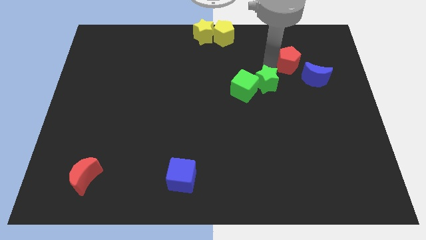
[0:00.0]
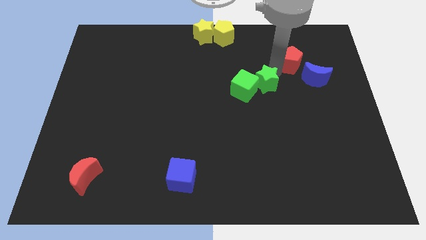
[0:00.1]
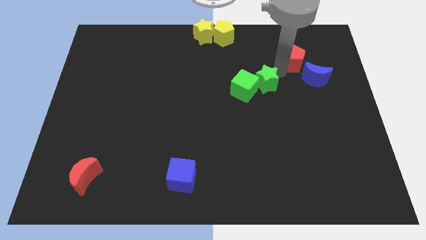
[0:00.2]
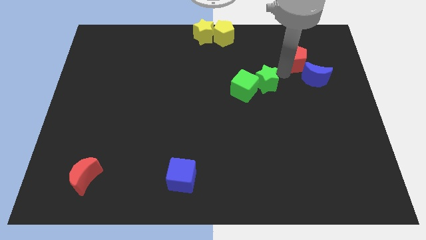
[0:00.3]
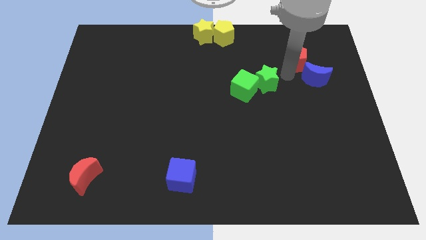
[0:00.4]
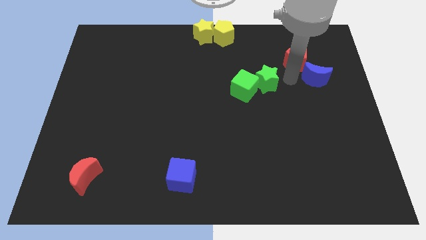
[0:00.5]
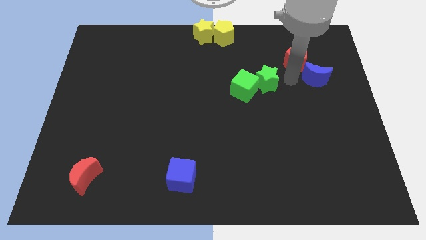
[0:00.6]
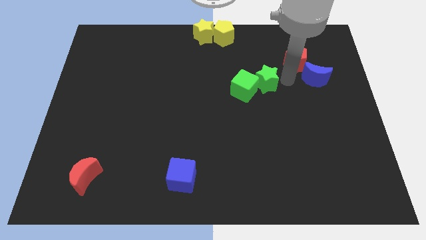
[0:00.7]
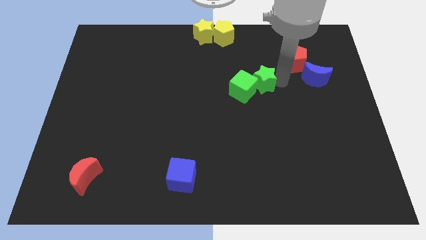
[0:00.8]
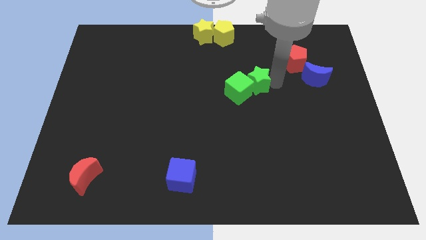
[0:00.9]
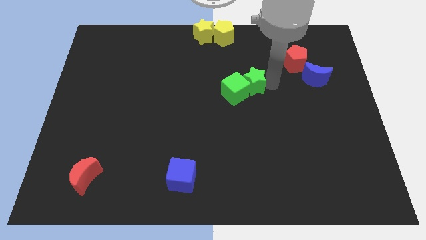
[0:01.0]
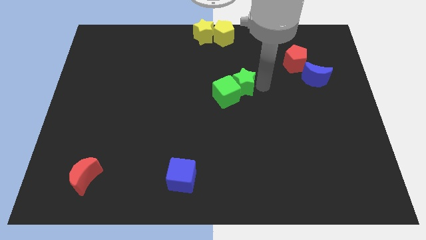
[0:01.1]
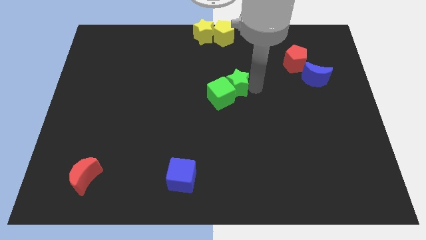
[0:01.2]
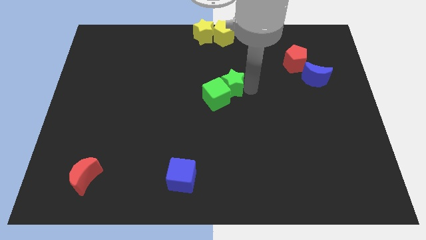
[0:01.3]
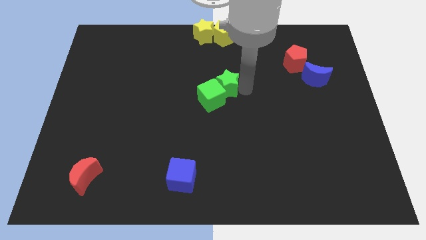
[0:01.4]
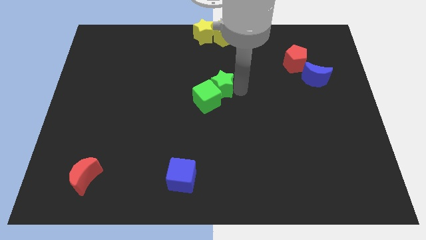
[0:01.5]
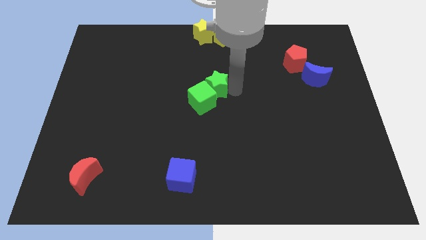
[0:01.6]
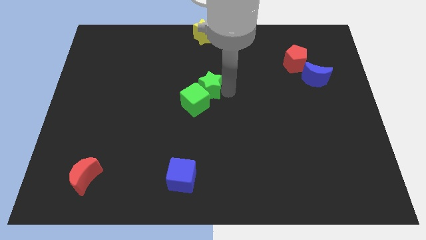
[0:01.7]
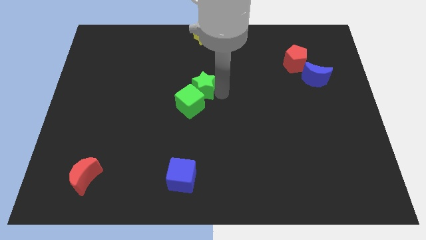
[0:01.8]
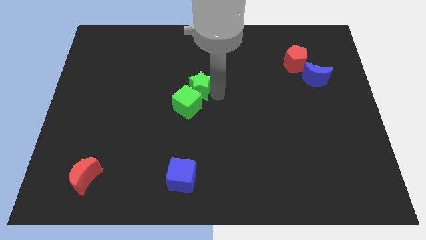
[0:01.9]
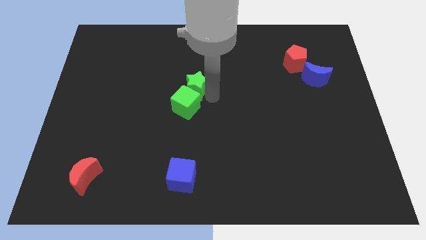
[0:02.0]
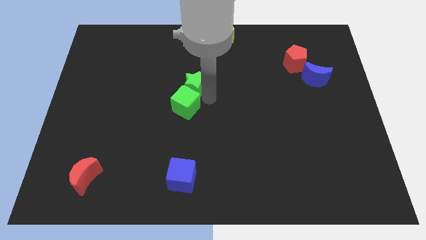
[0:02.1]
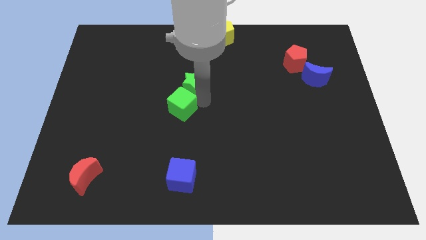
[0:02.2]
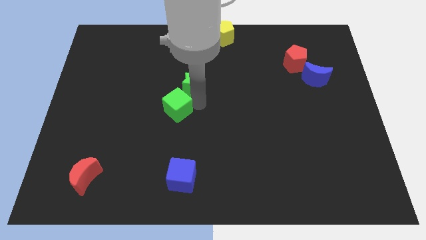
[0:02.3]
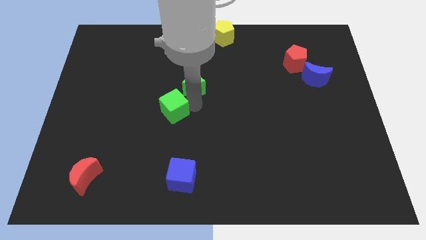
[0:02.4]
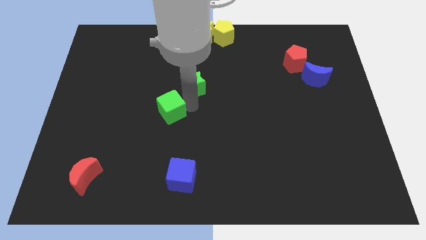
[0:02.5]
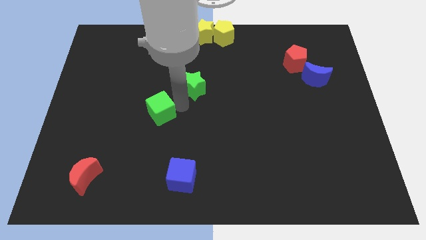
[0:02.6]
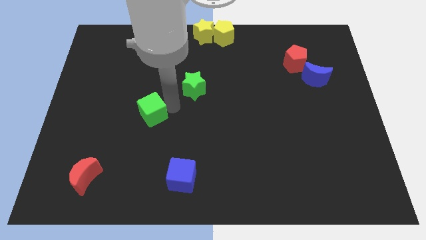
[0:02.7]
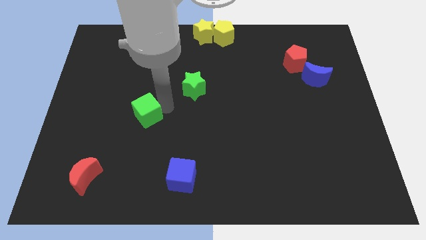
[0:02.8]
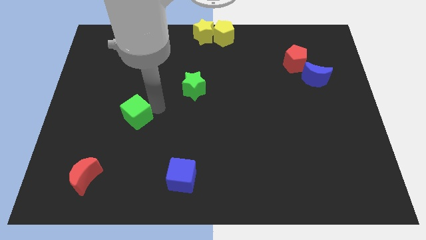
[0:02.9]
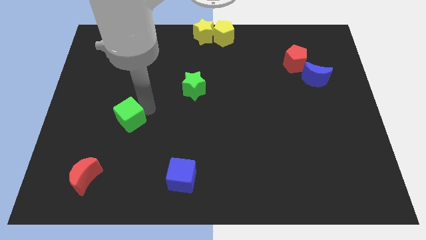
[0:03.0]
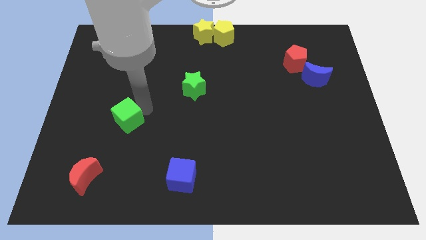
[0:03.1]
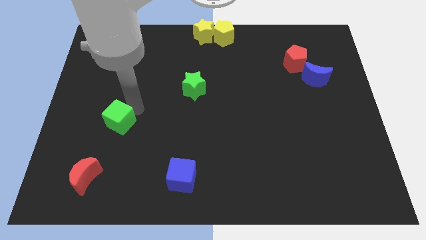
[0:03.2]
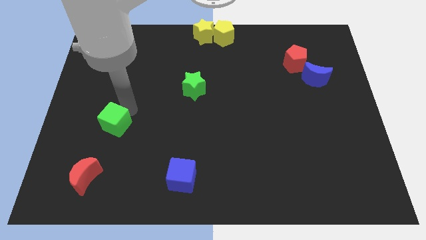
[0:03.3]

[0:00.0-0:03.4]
move the green cube above the red moon

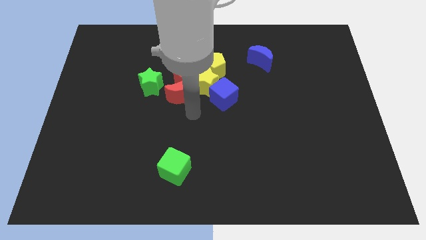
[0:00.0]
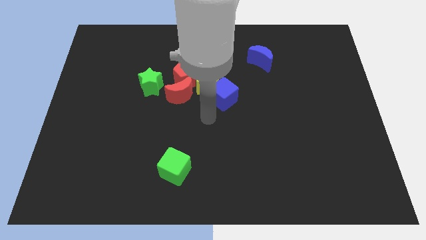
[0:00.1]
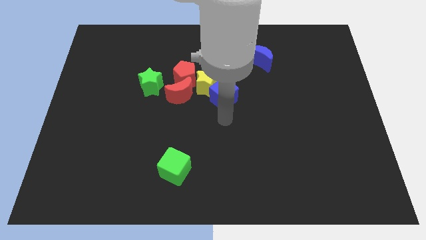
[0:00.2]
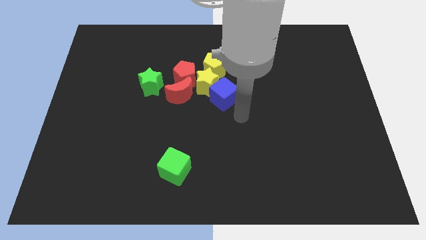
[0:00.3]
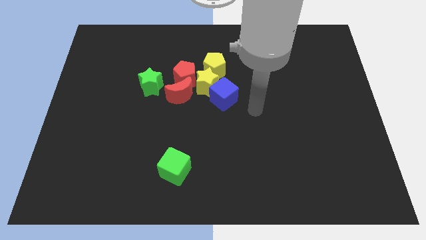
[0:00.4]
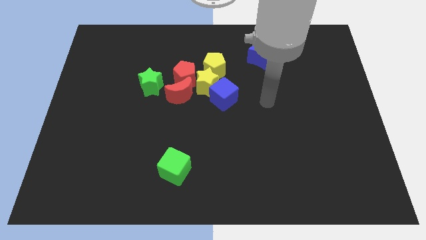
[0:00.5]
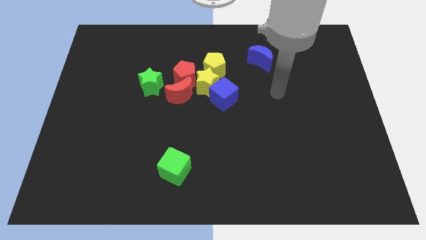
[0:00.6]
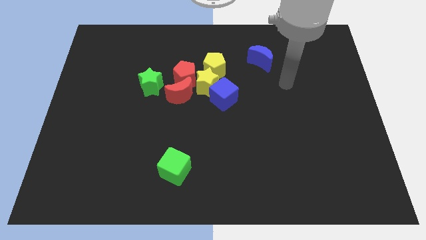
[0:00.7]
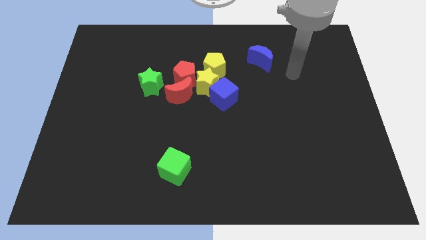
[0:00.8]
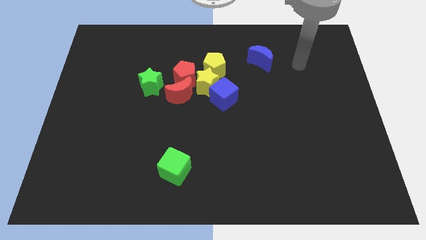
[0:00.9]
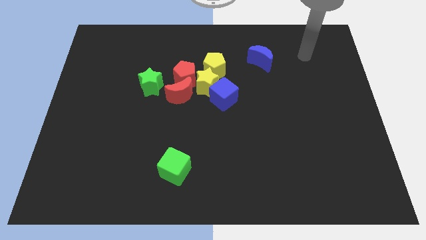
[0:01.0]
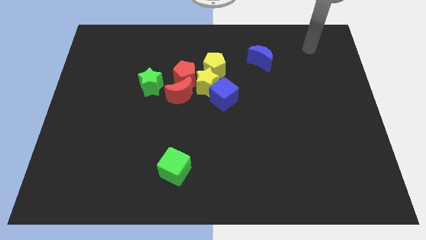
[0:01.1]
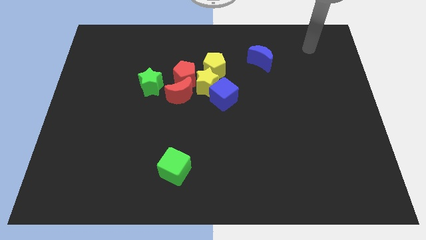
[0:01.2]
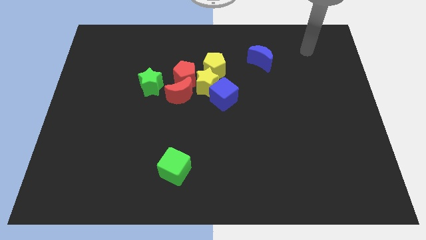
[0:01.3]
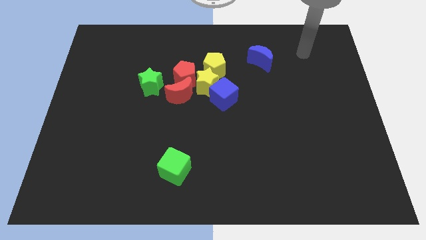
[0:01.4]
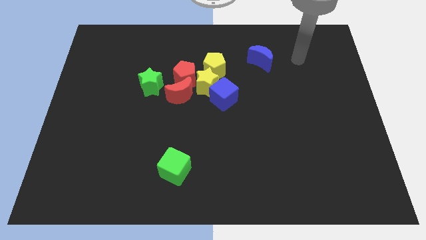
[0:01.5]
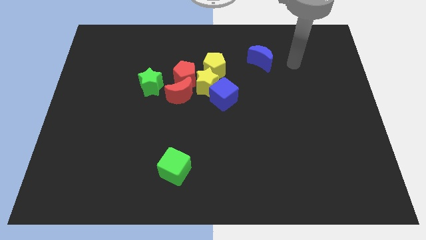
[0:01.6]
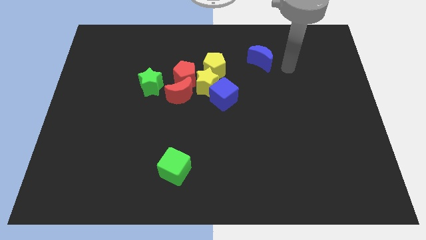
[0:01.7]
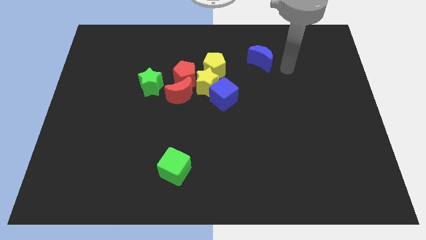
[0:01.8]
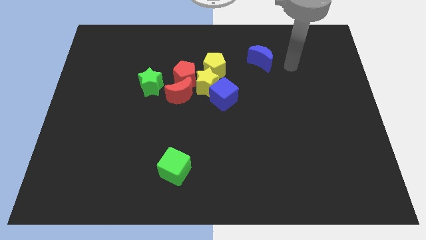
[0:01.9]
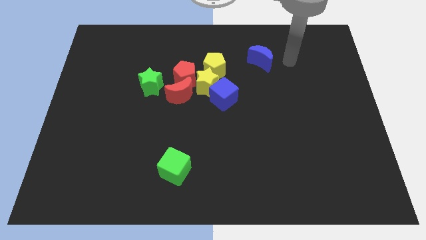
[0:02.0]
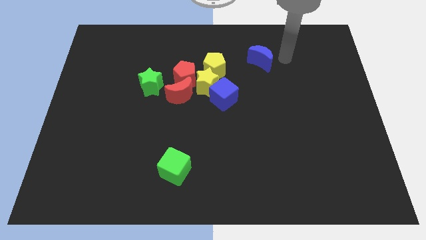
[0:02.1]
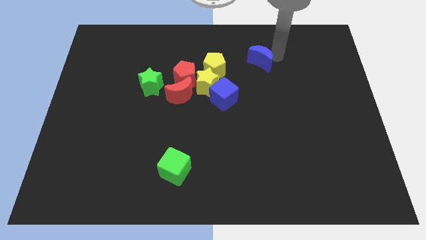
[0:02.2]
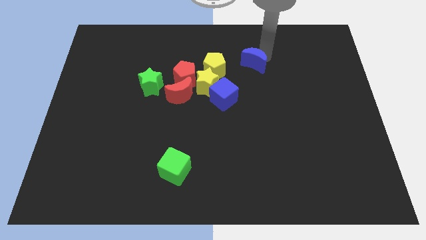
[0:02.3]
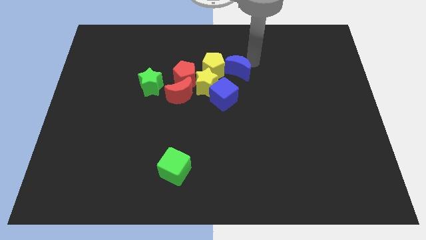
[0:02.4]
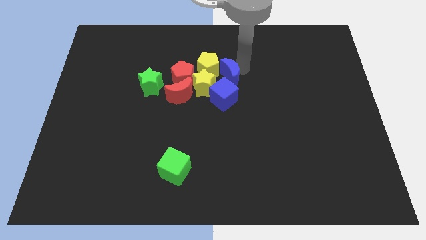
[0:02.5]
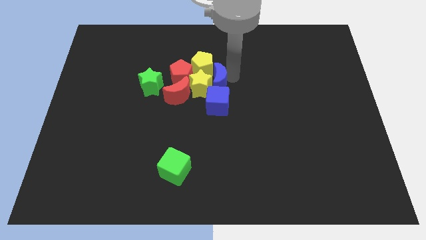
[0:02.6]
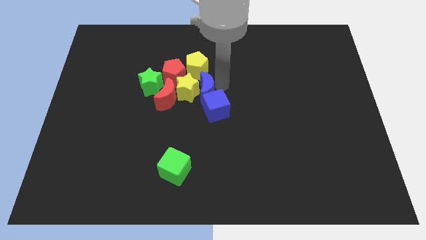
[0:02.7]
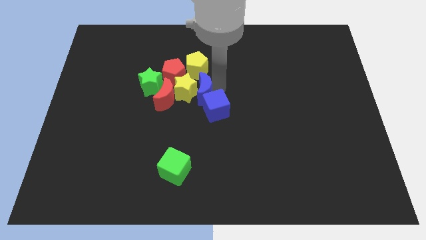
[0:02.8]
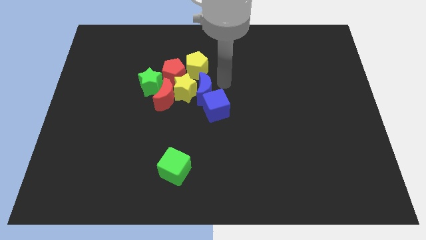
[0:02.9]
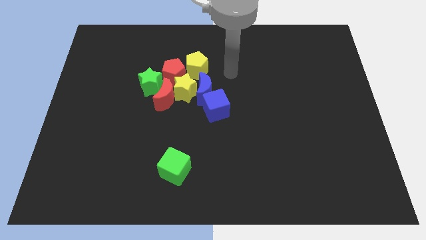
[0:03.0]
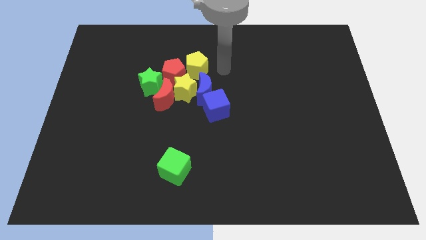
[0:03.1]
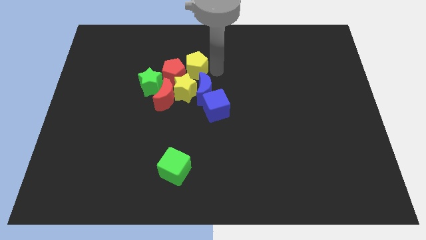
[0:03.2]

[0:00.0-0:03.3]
place the blue crescent diagonally in between the yellow pentagon and blue cube

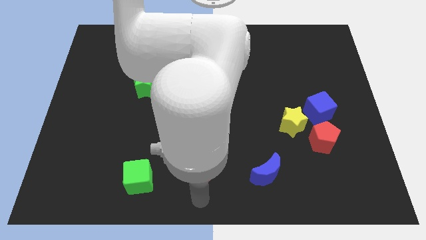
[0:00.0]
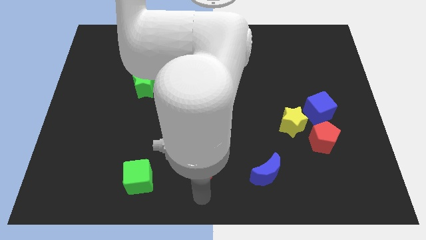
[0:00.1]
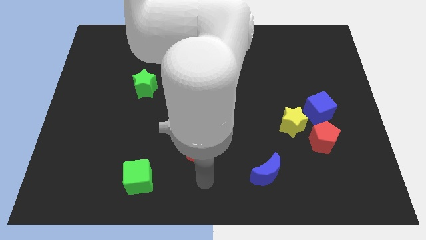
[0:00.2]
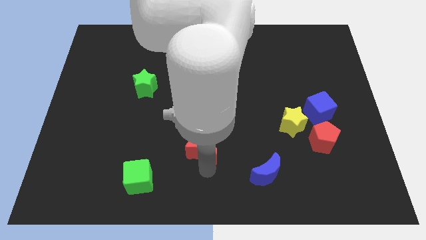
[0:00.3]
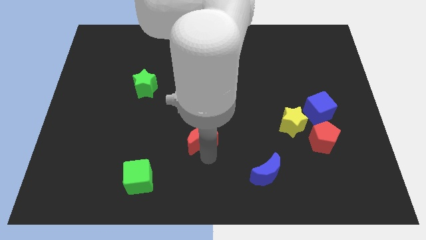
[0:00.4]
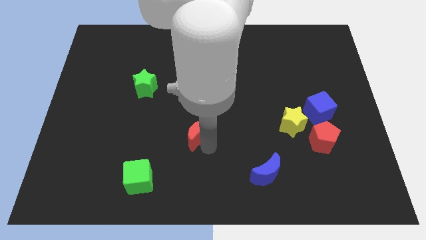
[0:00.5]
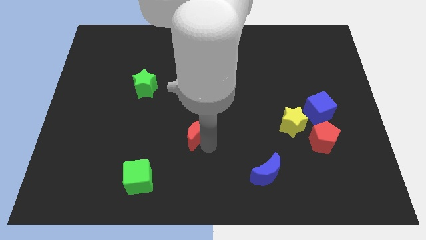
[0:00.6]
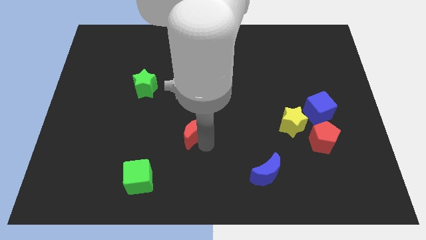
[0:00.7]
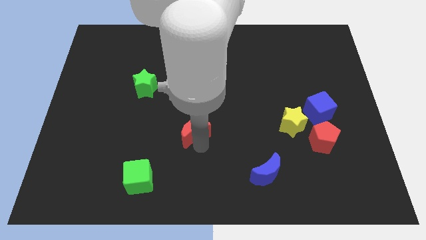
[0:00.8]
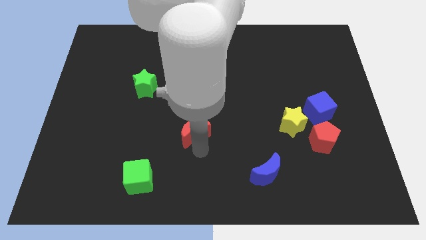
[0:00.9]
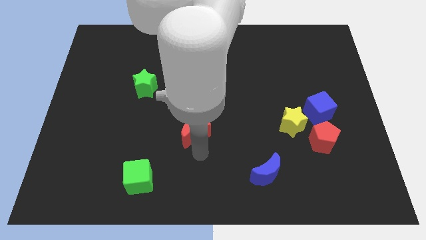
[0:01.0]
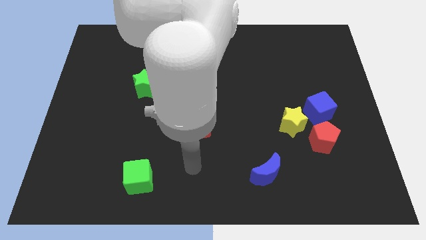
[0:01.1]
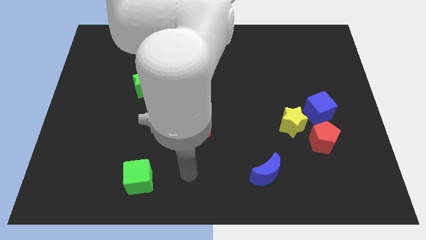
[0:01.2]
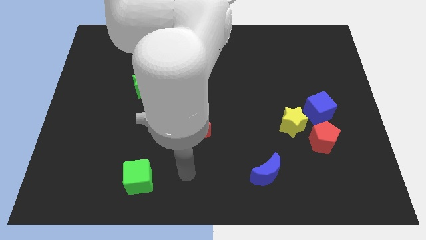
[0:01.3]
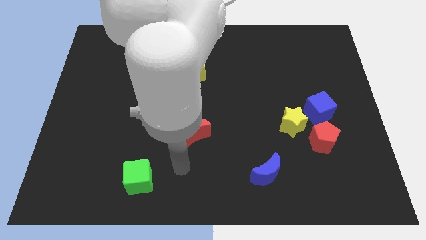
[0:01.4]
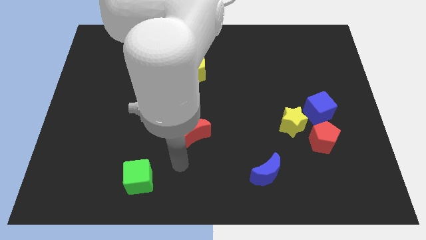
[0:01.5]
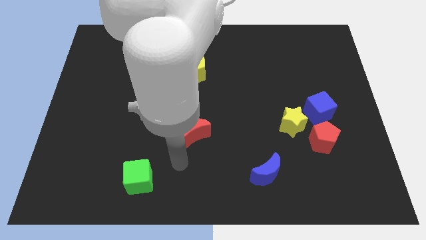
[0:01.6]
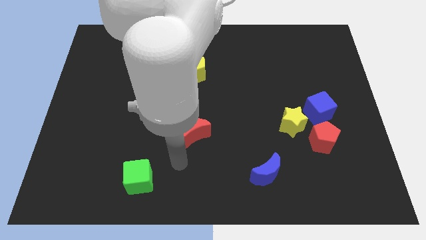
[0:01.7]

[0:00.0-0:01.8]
push the red crescent towards the yellow pentagon

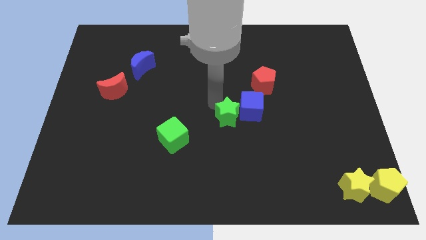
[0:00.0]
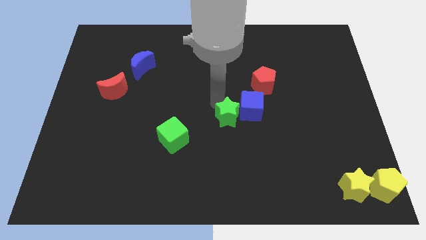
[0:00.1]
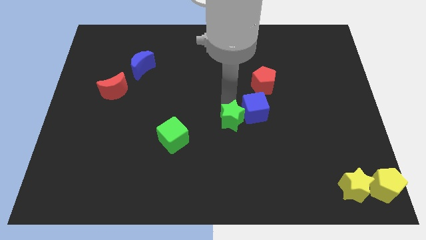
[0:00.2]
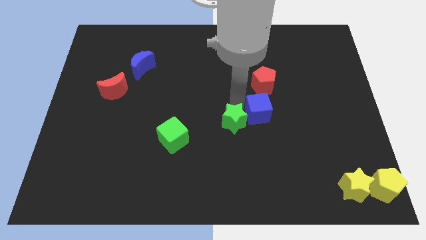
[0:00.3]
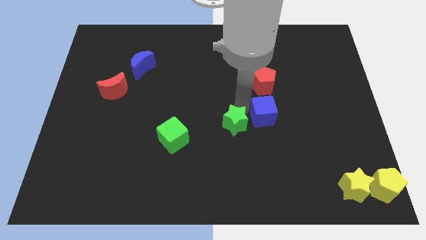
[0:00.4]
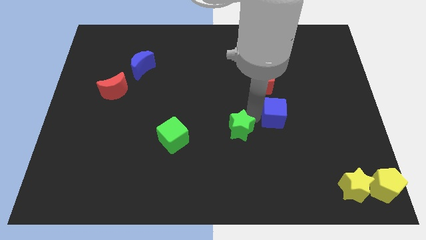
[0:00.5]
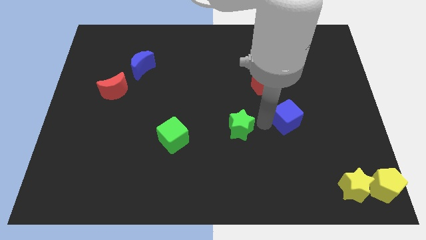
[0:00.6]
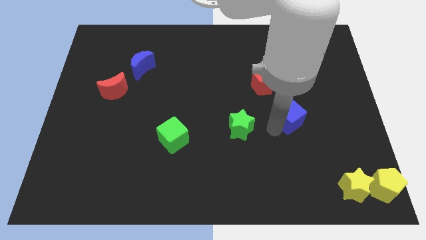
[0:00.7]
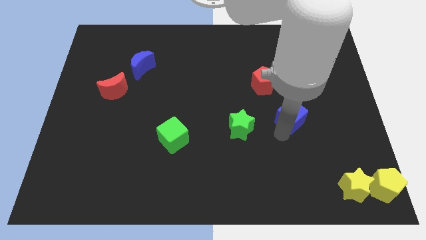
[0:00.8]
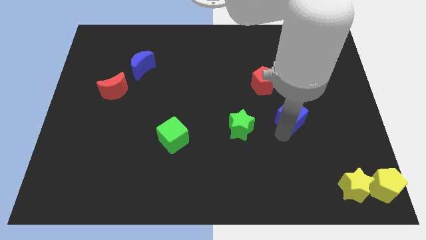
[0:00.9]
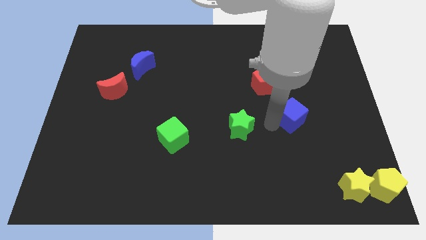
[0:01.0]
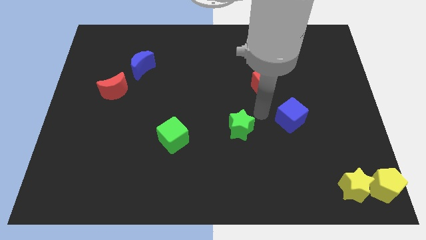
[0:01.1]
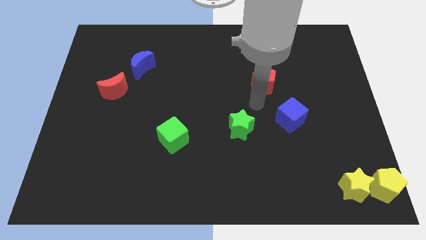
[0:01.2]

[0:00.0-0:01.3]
move the blue cube slightly towards the right
